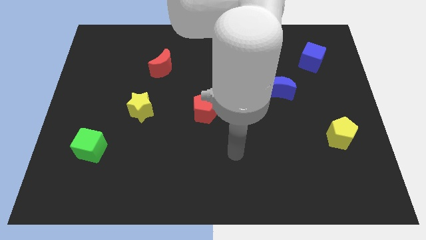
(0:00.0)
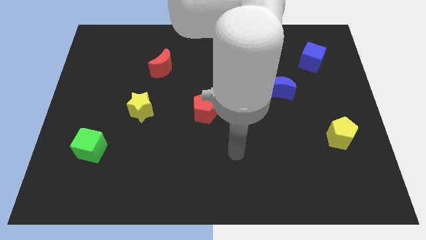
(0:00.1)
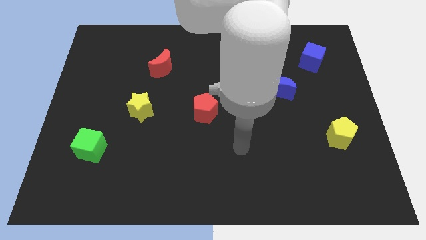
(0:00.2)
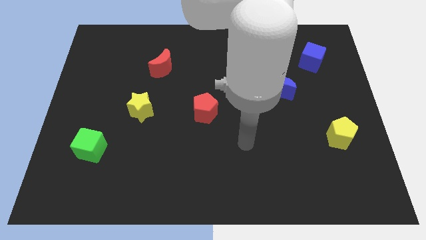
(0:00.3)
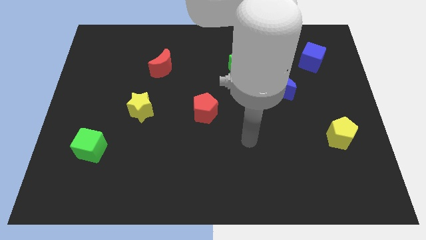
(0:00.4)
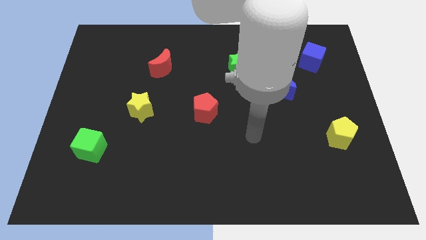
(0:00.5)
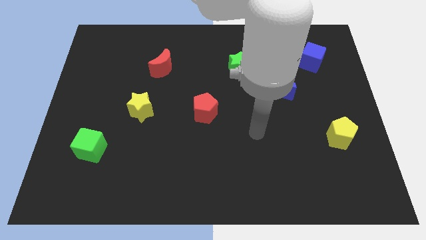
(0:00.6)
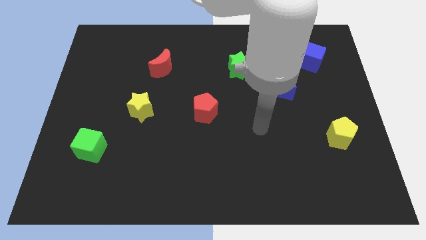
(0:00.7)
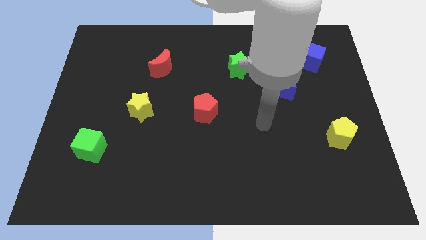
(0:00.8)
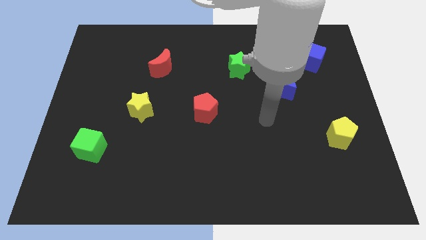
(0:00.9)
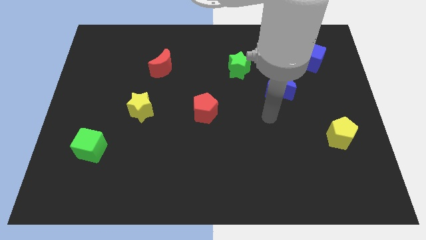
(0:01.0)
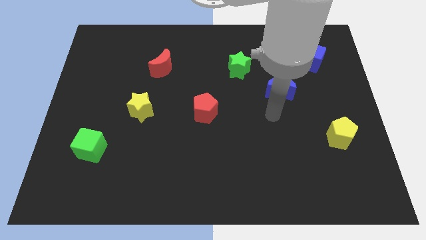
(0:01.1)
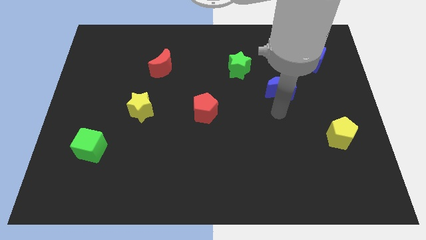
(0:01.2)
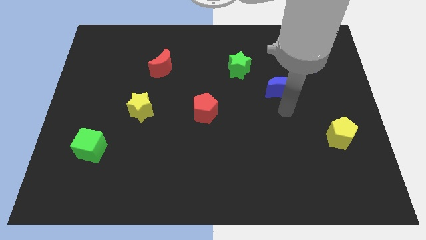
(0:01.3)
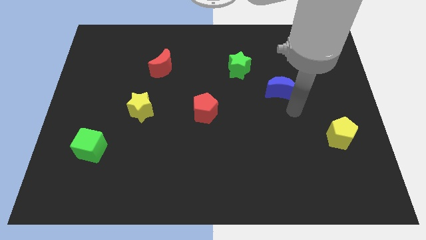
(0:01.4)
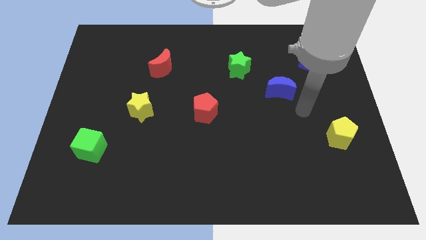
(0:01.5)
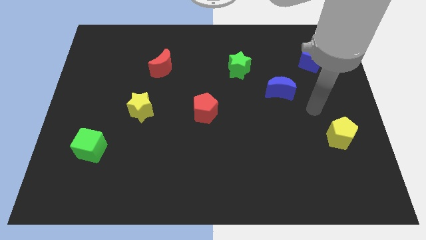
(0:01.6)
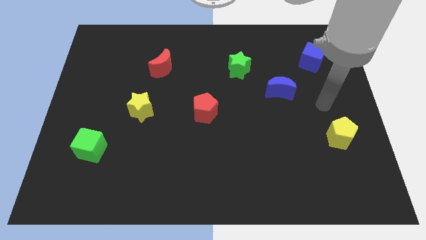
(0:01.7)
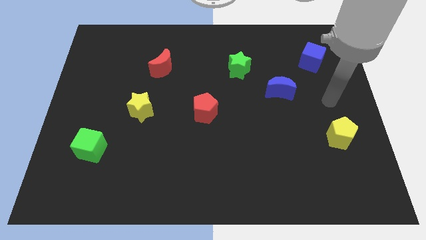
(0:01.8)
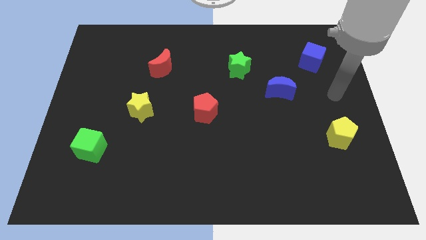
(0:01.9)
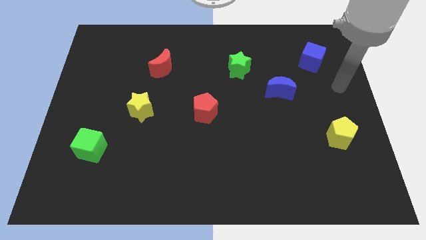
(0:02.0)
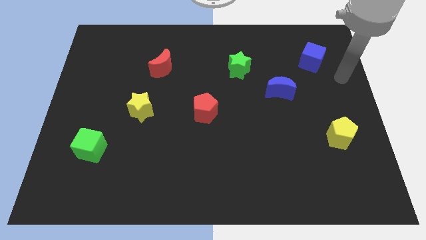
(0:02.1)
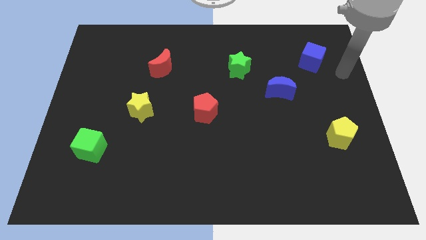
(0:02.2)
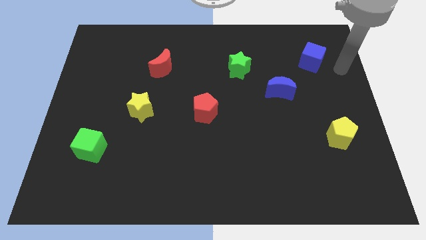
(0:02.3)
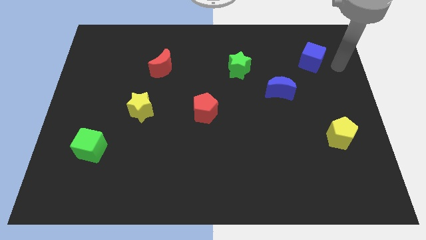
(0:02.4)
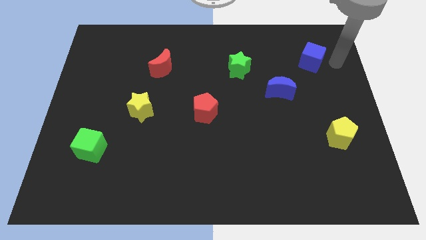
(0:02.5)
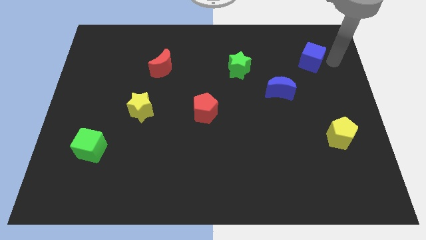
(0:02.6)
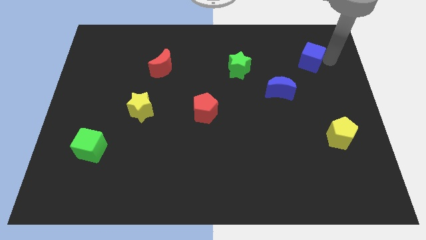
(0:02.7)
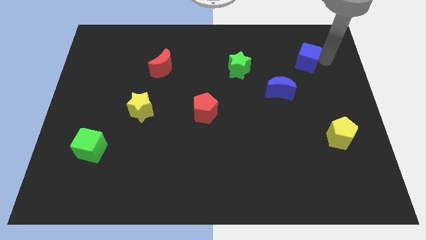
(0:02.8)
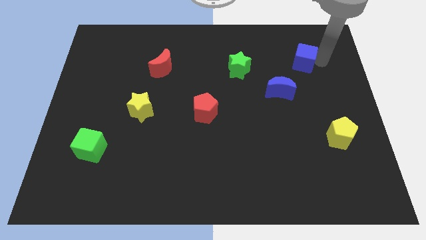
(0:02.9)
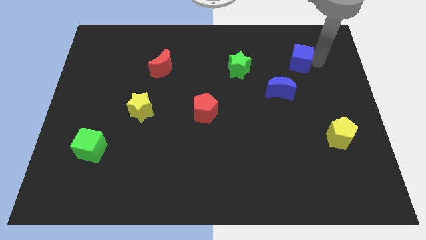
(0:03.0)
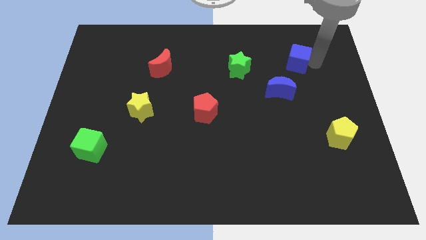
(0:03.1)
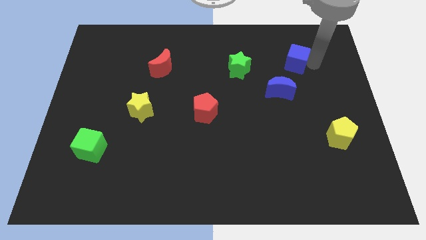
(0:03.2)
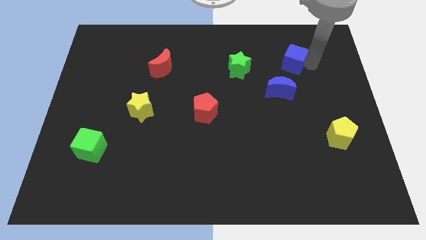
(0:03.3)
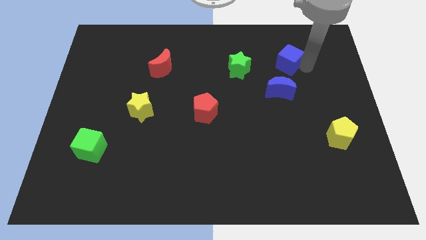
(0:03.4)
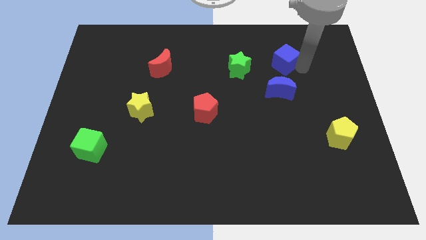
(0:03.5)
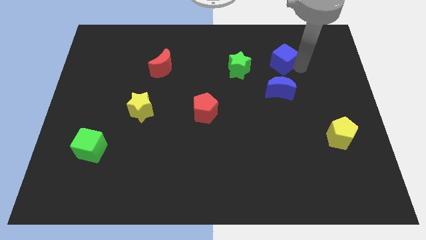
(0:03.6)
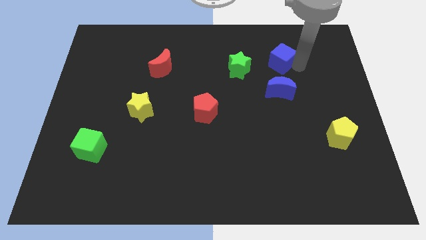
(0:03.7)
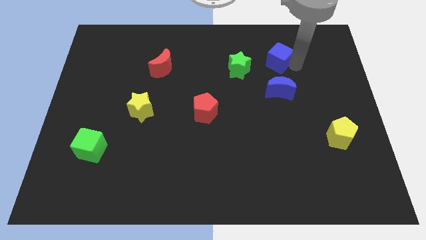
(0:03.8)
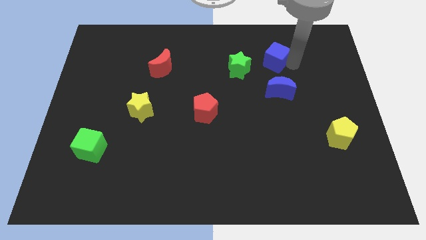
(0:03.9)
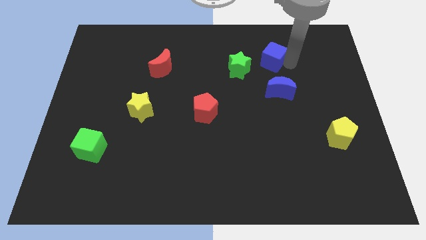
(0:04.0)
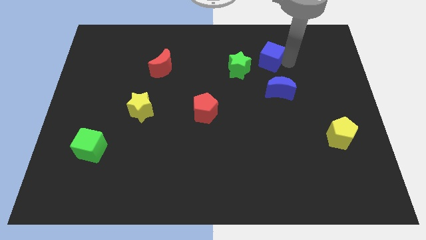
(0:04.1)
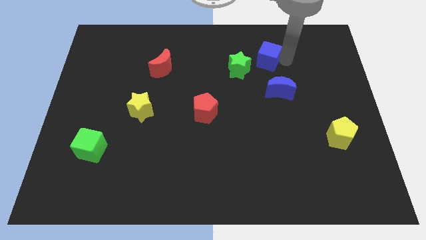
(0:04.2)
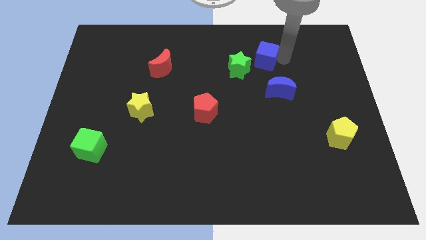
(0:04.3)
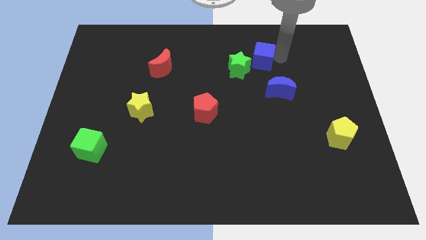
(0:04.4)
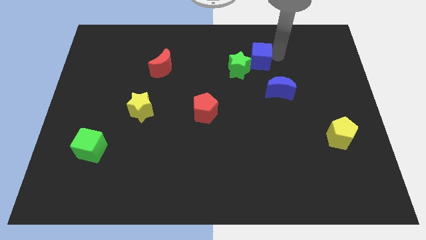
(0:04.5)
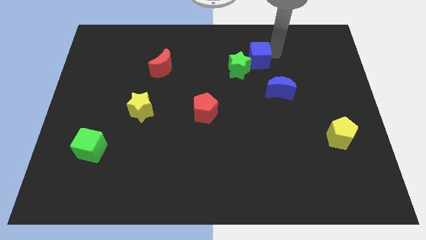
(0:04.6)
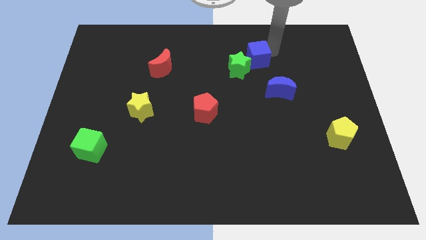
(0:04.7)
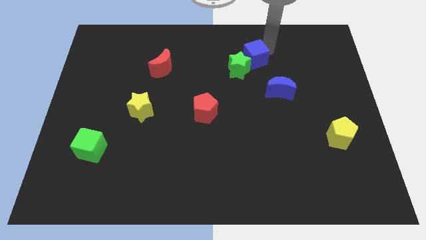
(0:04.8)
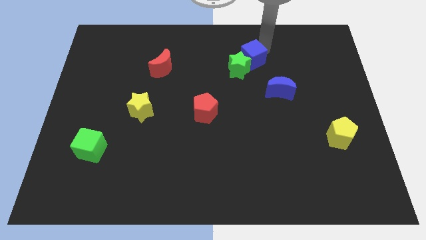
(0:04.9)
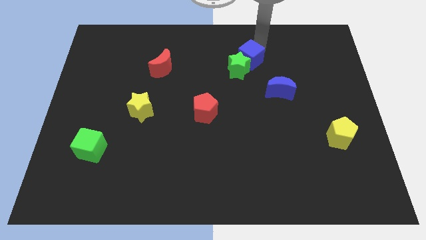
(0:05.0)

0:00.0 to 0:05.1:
move the blue cube to the green star

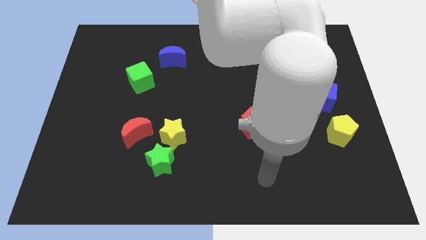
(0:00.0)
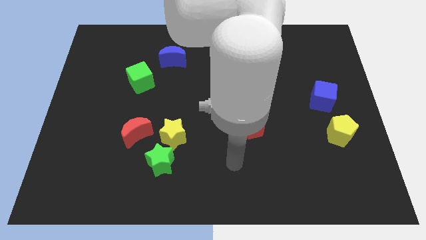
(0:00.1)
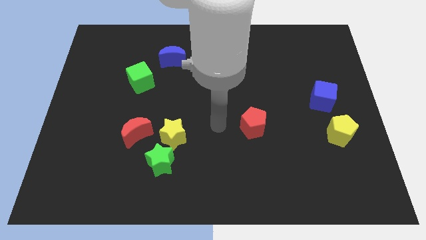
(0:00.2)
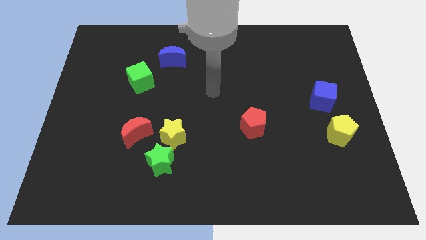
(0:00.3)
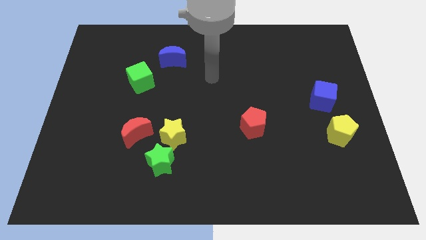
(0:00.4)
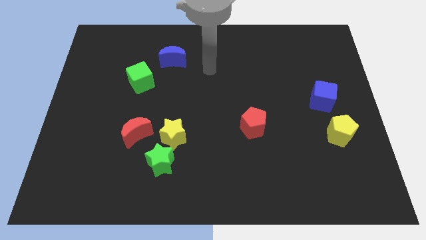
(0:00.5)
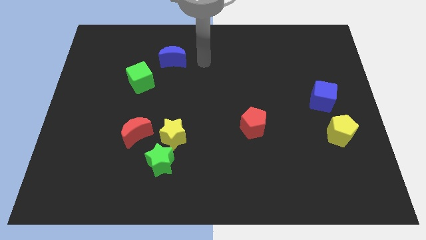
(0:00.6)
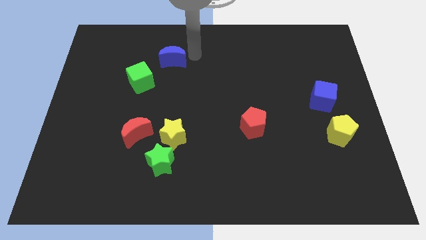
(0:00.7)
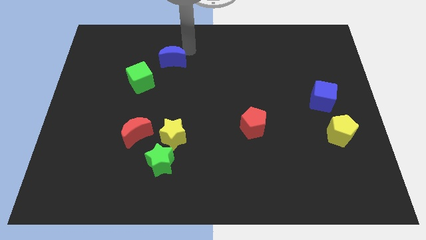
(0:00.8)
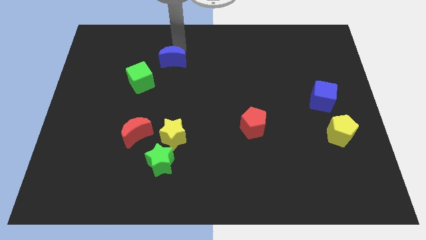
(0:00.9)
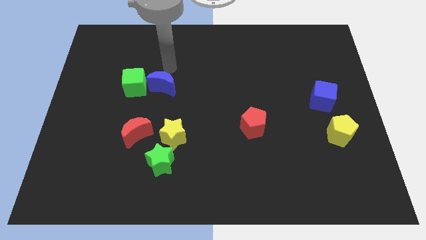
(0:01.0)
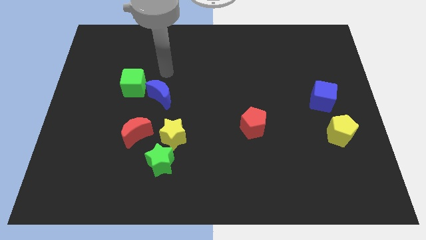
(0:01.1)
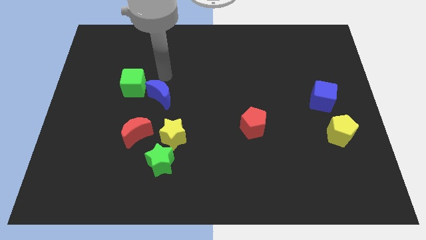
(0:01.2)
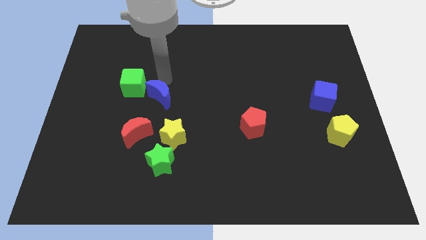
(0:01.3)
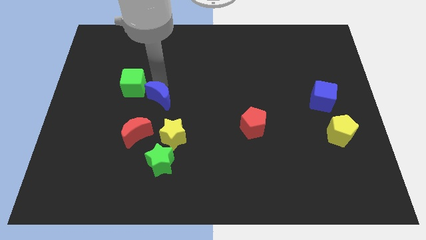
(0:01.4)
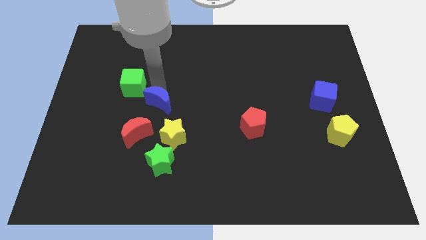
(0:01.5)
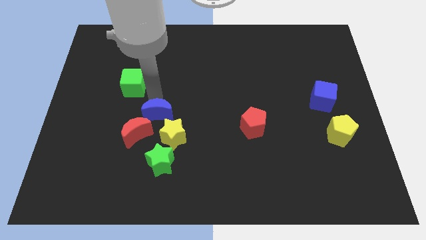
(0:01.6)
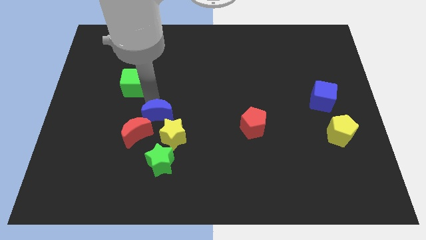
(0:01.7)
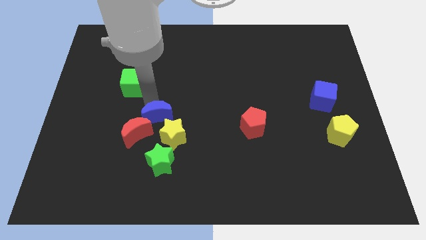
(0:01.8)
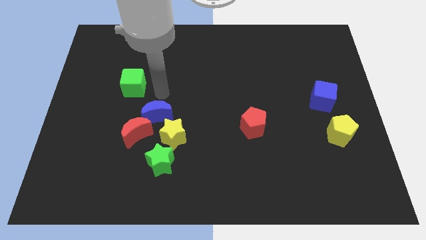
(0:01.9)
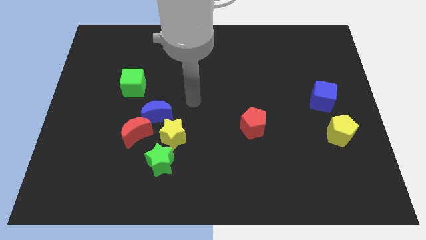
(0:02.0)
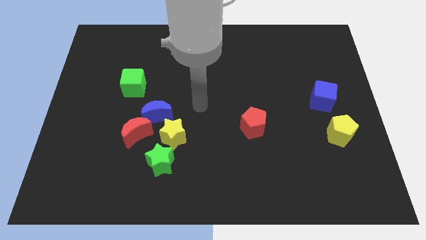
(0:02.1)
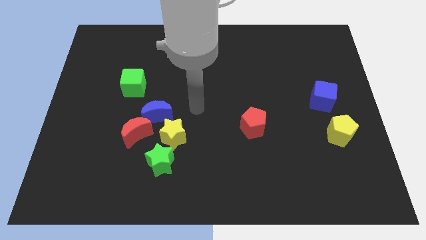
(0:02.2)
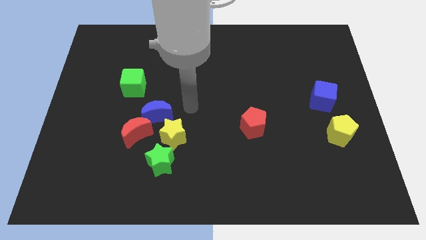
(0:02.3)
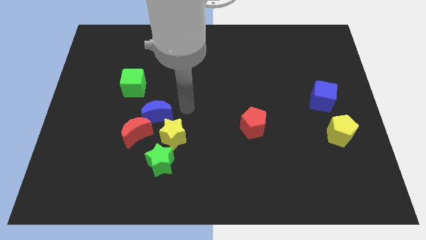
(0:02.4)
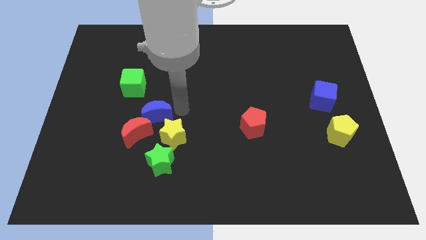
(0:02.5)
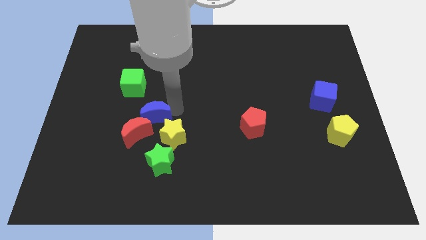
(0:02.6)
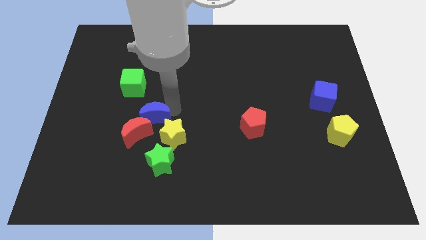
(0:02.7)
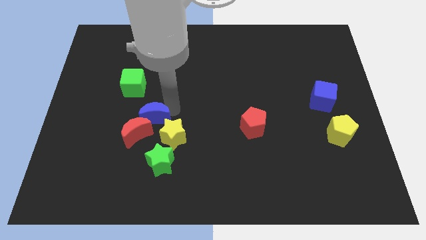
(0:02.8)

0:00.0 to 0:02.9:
put the blue moon towards the red moon

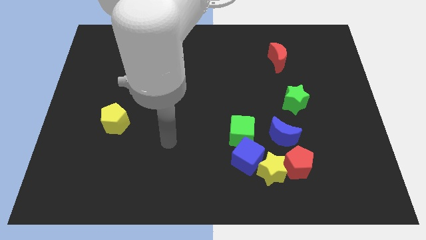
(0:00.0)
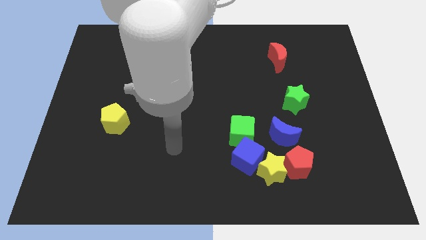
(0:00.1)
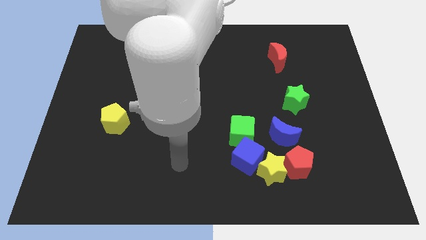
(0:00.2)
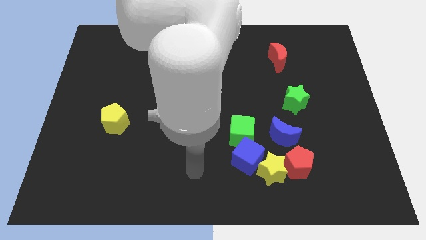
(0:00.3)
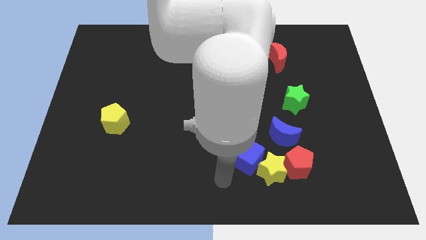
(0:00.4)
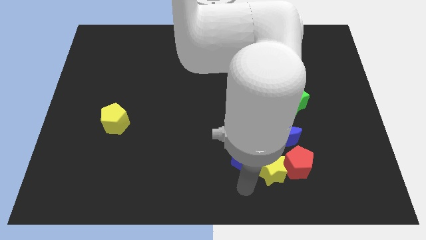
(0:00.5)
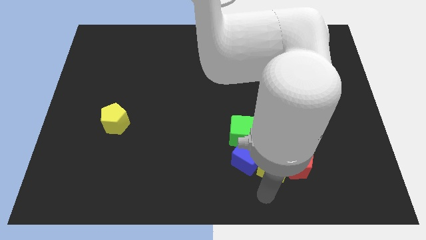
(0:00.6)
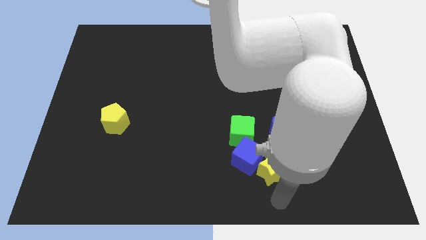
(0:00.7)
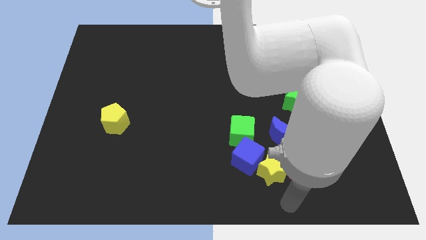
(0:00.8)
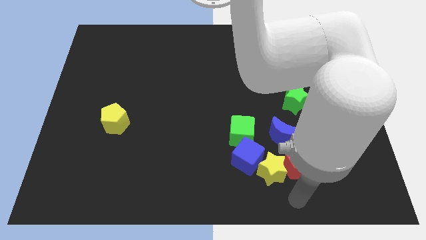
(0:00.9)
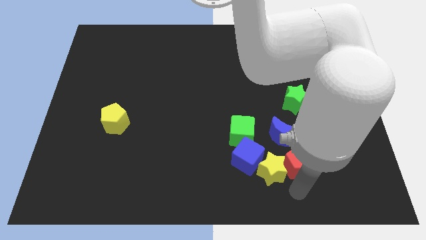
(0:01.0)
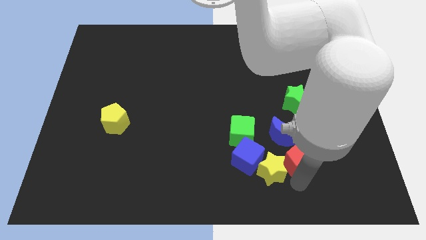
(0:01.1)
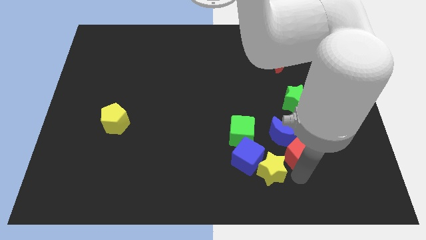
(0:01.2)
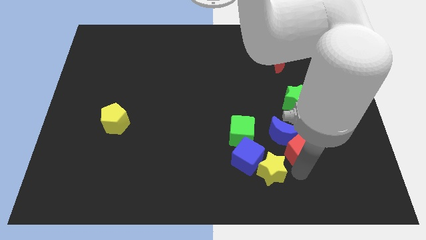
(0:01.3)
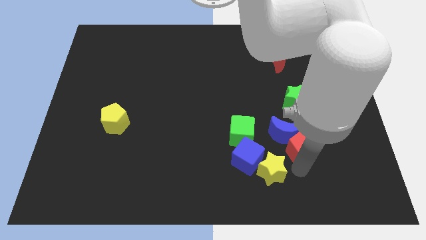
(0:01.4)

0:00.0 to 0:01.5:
move the red pentagon to the blue moon
